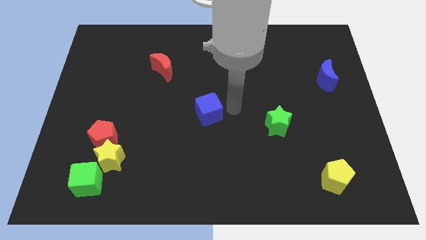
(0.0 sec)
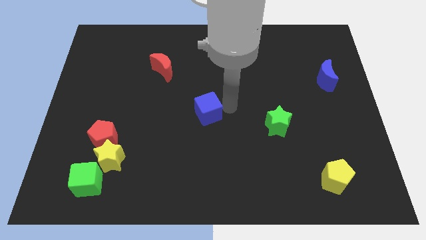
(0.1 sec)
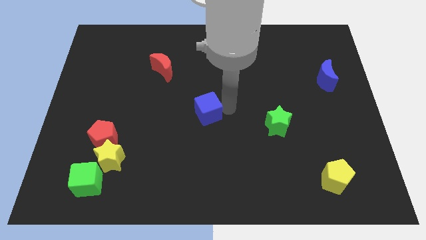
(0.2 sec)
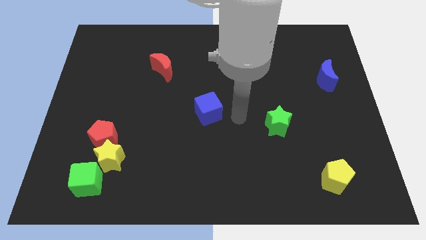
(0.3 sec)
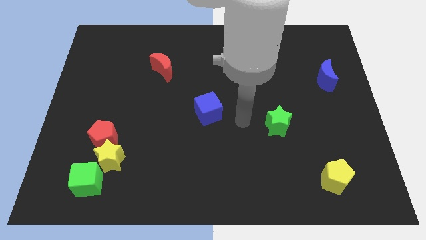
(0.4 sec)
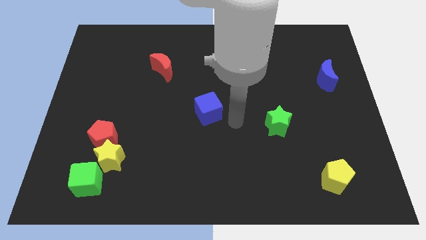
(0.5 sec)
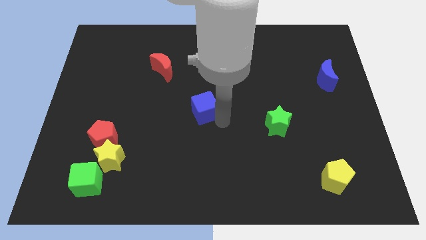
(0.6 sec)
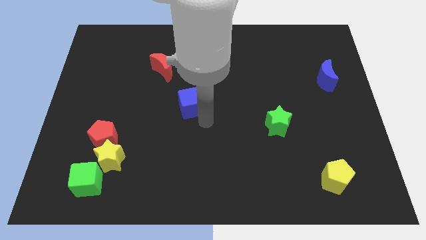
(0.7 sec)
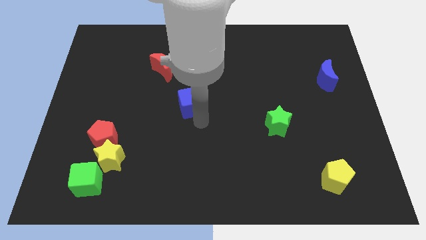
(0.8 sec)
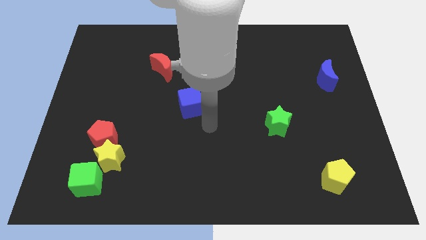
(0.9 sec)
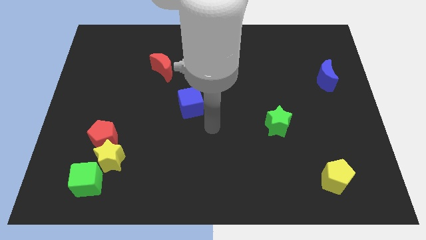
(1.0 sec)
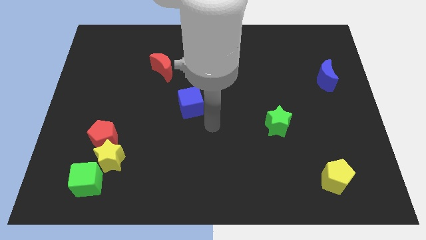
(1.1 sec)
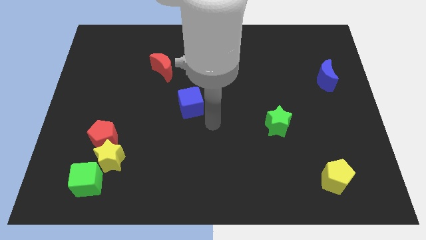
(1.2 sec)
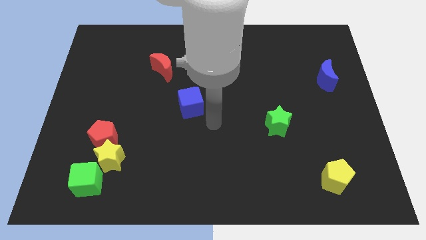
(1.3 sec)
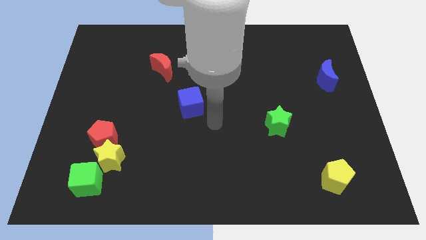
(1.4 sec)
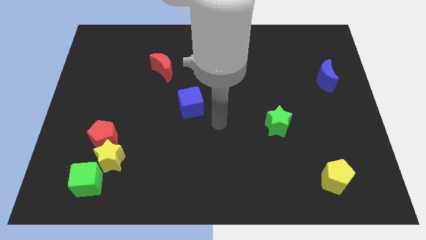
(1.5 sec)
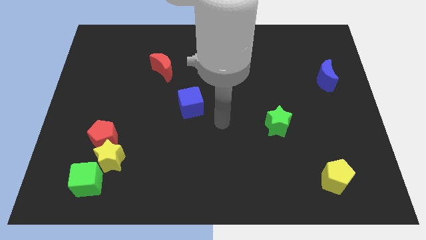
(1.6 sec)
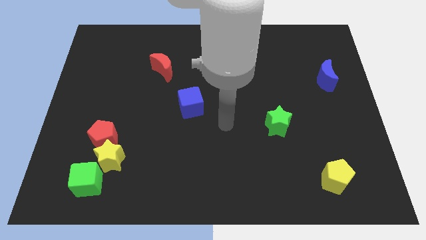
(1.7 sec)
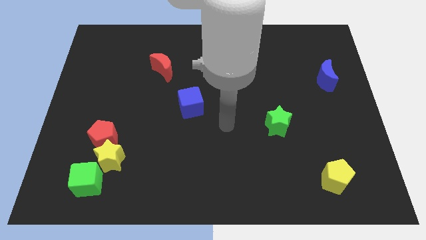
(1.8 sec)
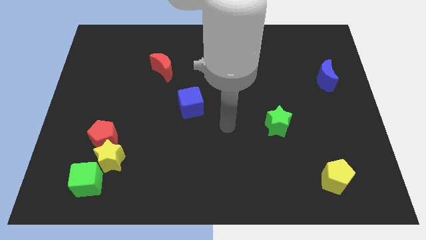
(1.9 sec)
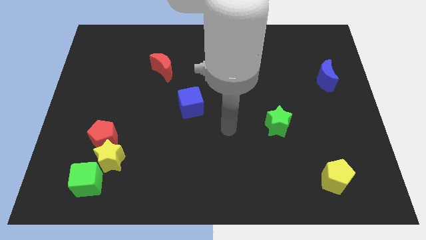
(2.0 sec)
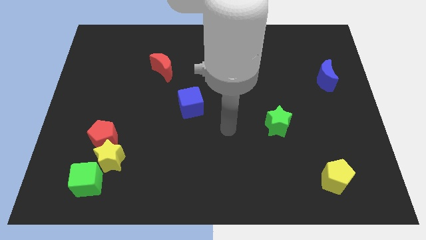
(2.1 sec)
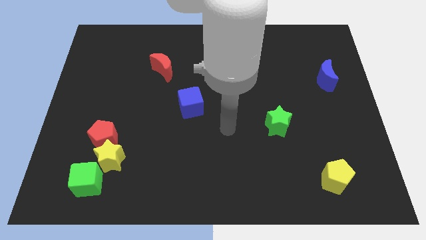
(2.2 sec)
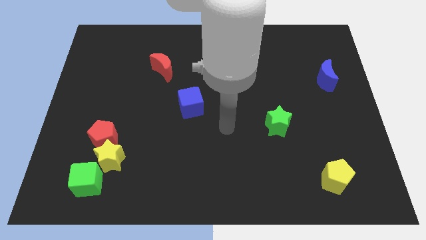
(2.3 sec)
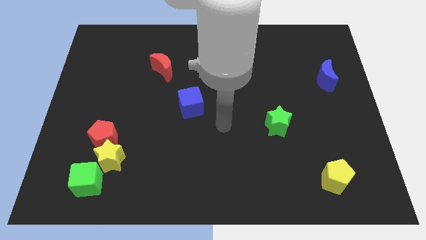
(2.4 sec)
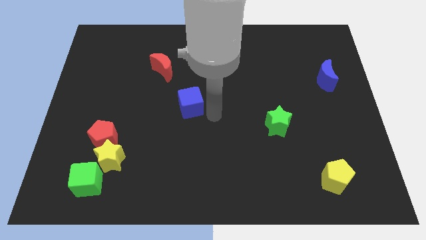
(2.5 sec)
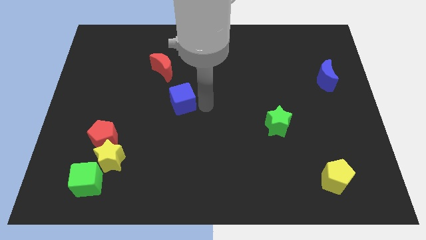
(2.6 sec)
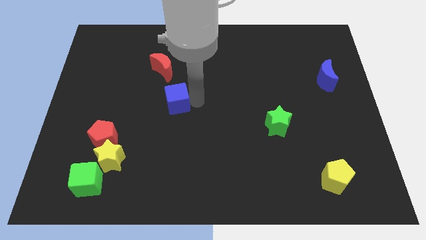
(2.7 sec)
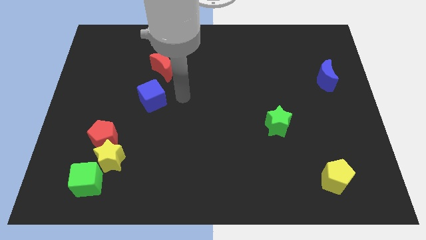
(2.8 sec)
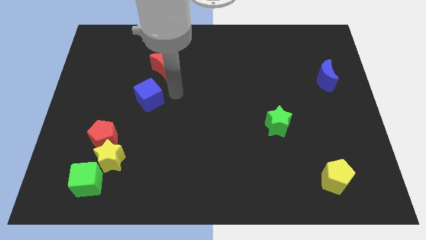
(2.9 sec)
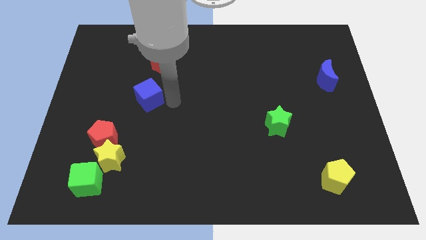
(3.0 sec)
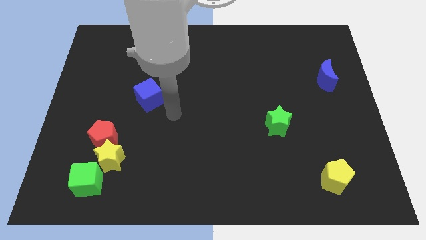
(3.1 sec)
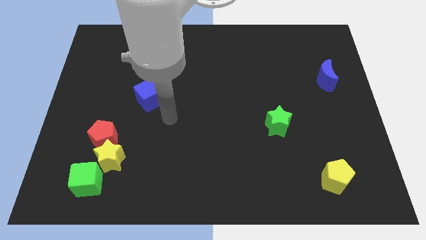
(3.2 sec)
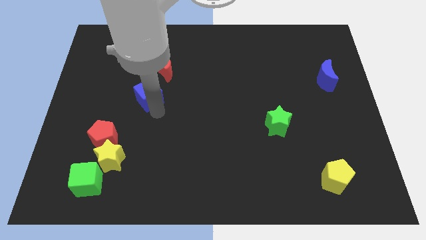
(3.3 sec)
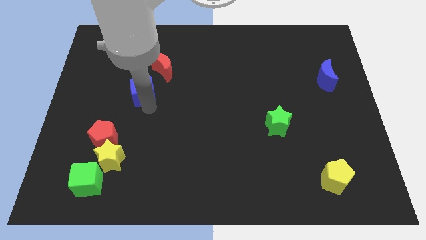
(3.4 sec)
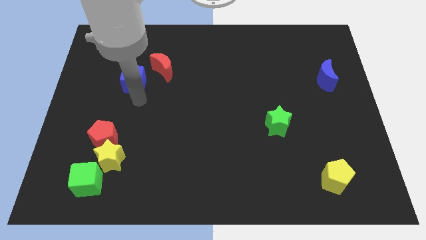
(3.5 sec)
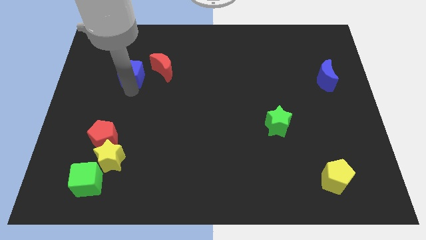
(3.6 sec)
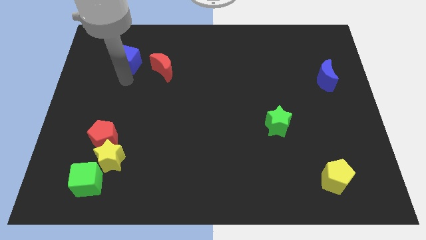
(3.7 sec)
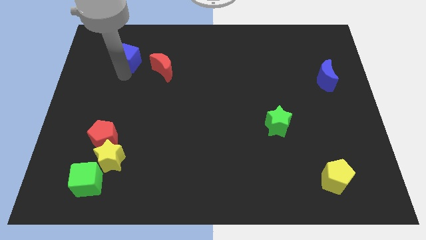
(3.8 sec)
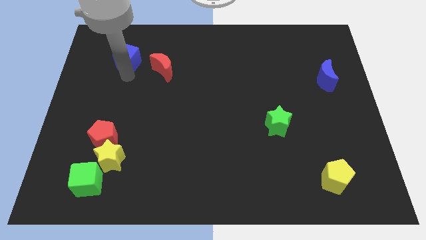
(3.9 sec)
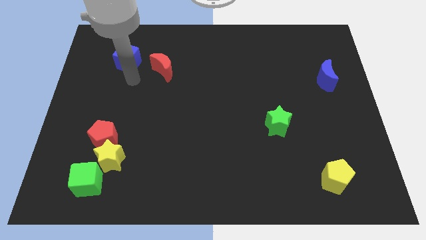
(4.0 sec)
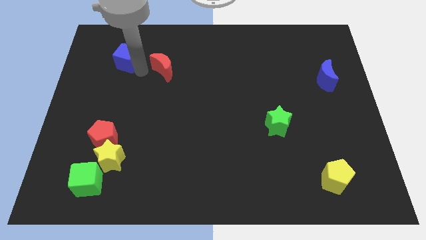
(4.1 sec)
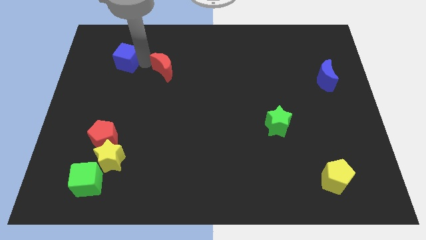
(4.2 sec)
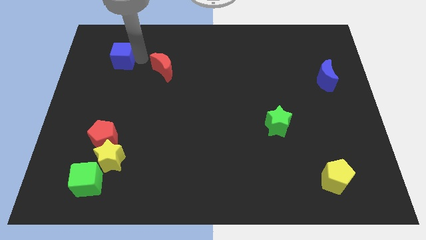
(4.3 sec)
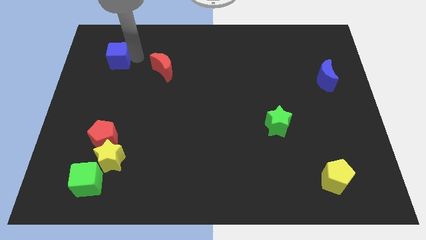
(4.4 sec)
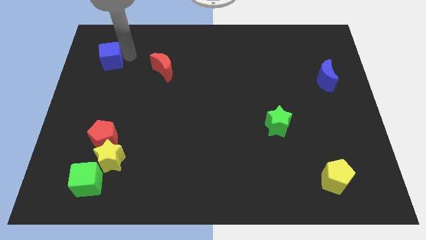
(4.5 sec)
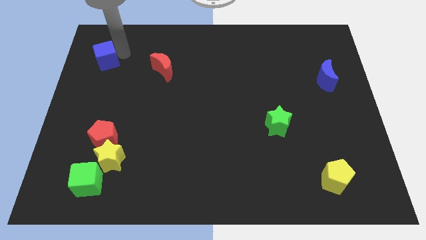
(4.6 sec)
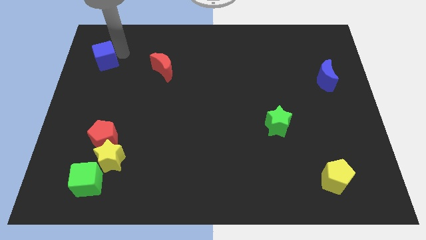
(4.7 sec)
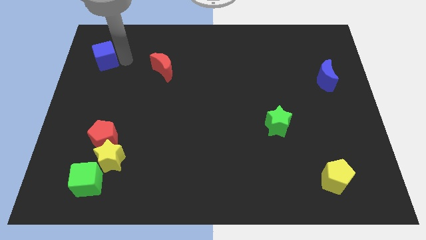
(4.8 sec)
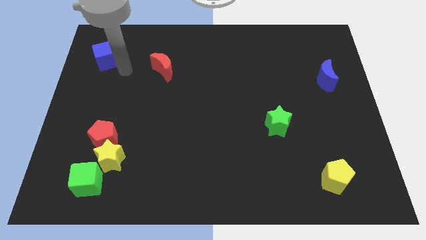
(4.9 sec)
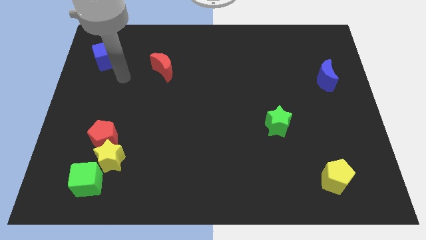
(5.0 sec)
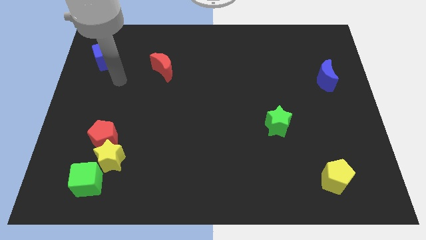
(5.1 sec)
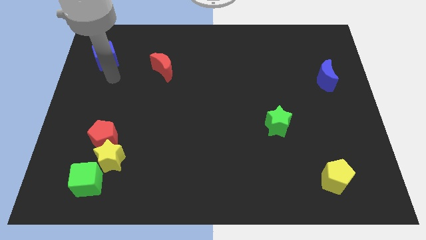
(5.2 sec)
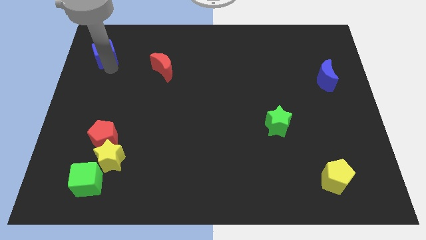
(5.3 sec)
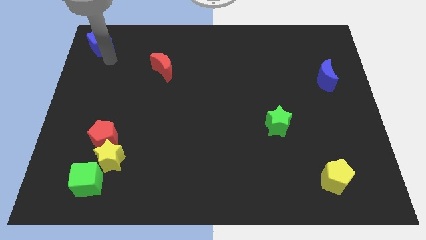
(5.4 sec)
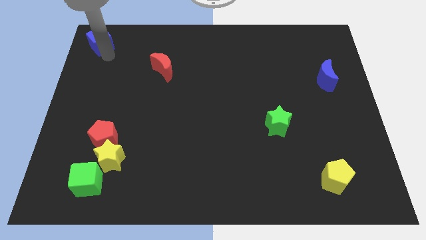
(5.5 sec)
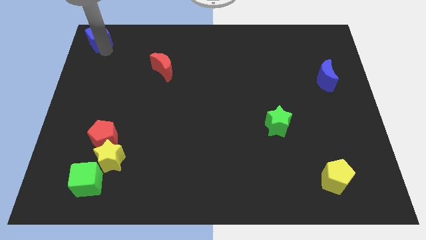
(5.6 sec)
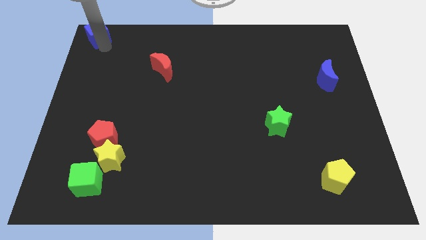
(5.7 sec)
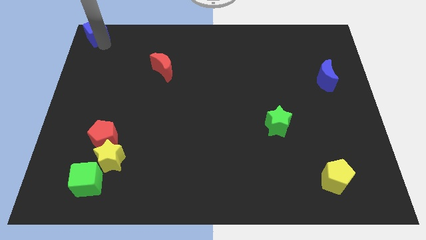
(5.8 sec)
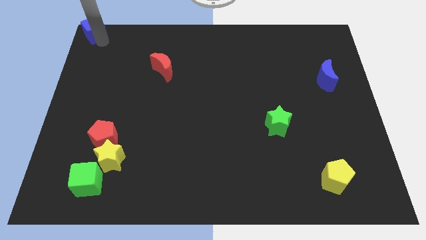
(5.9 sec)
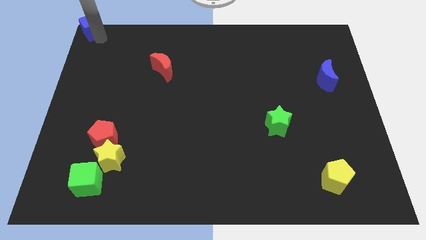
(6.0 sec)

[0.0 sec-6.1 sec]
push the blue cube towards the left top corner of the board

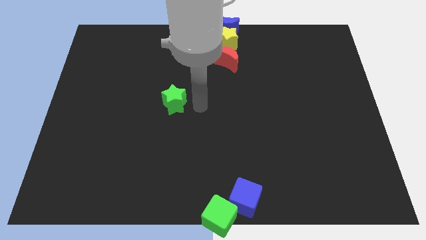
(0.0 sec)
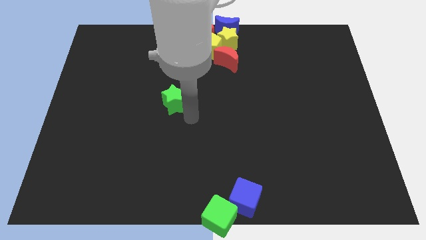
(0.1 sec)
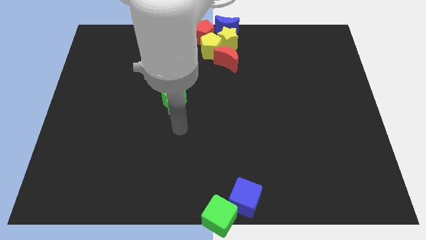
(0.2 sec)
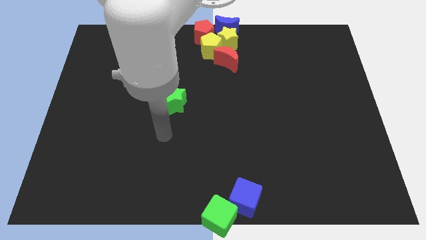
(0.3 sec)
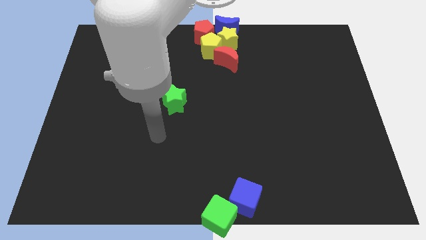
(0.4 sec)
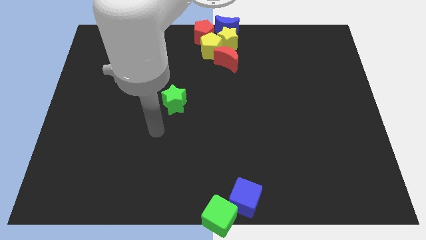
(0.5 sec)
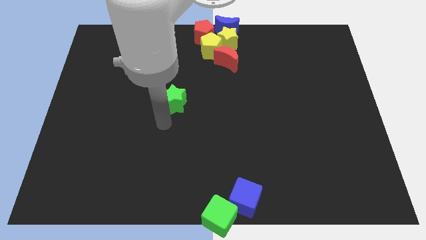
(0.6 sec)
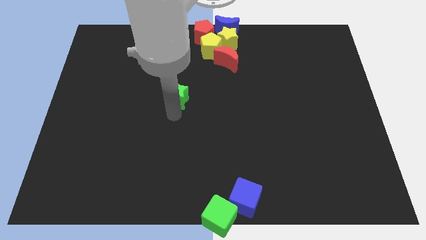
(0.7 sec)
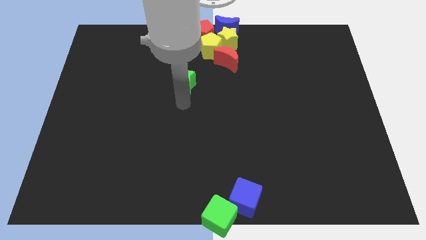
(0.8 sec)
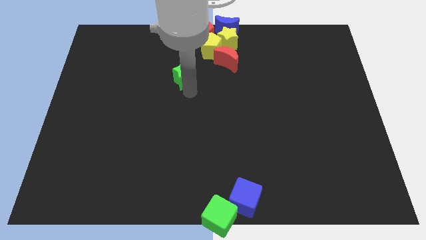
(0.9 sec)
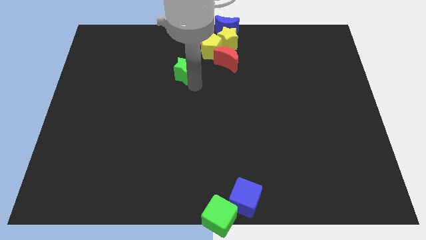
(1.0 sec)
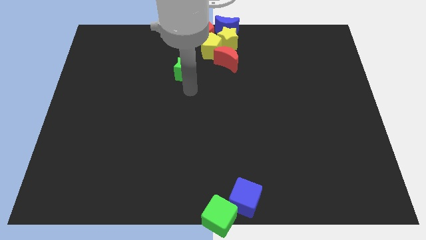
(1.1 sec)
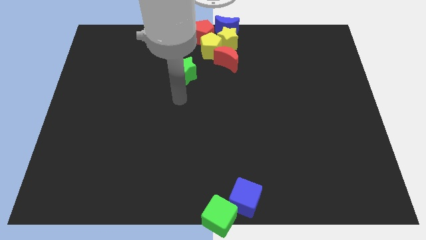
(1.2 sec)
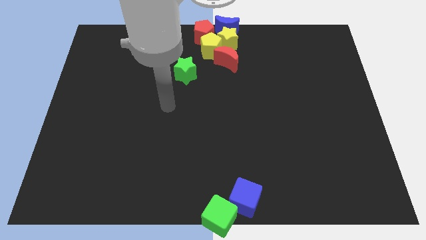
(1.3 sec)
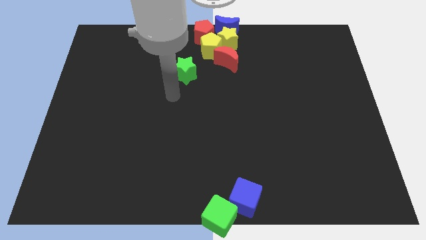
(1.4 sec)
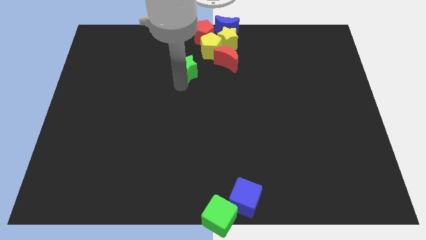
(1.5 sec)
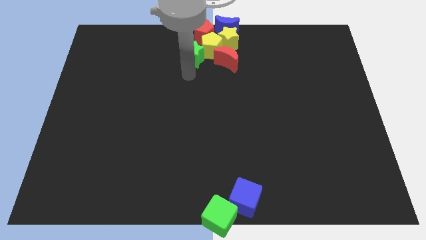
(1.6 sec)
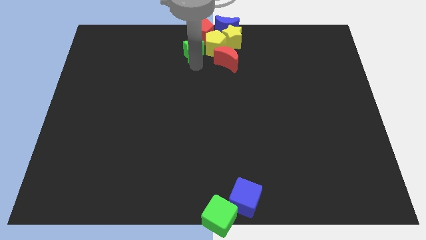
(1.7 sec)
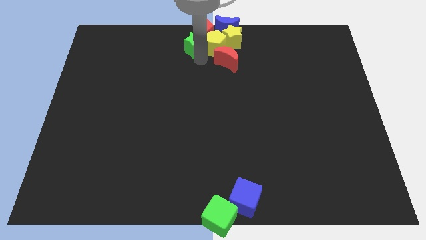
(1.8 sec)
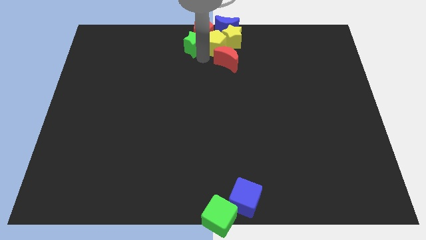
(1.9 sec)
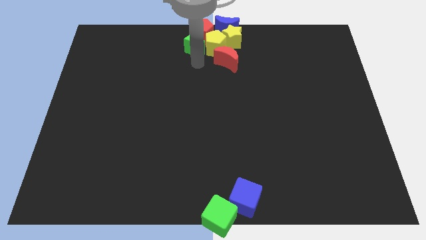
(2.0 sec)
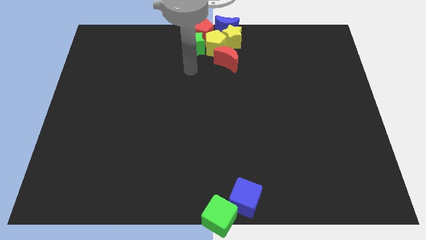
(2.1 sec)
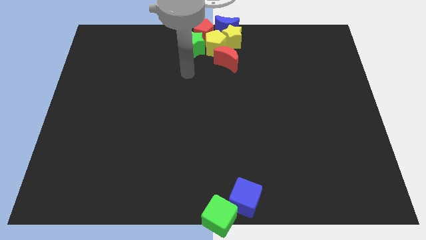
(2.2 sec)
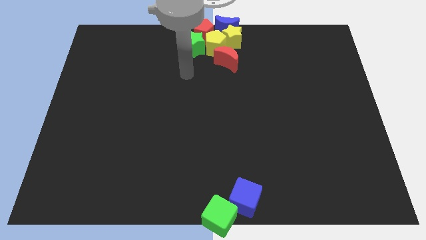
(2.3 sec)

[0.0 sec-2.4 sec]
push the green star into the group of blocks which are at the top center

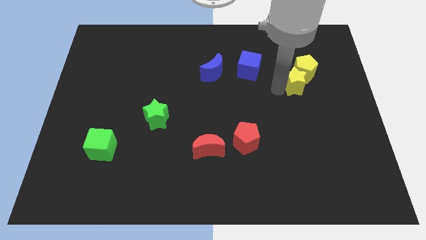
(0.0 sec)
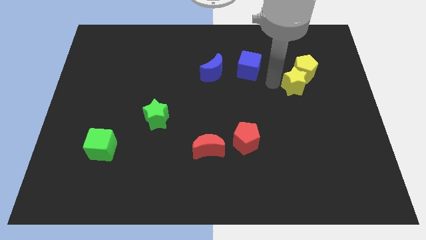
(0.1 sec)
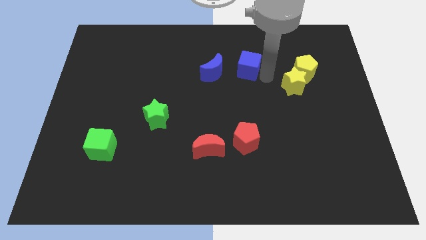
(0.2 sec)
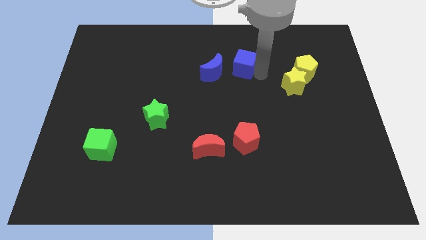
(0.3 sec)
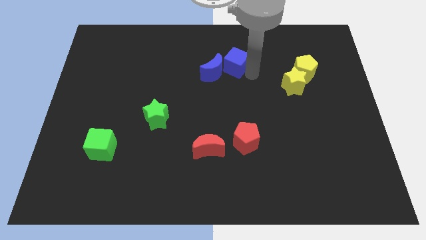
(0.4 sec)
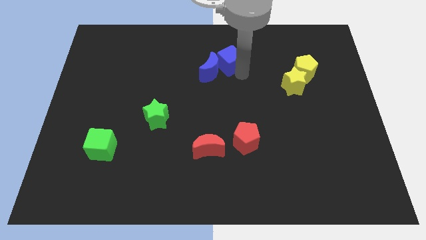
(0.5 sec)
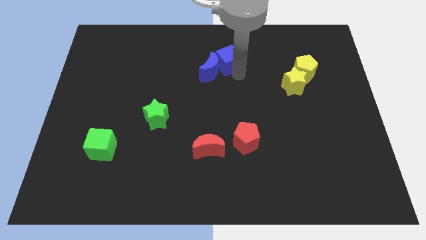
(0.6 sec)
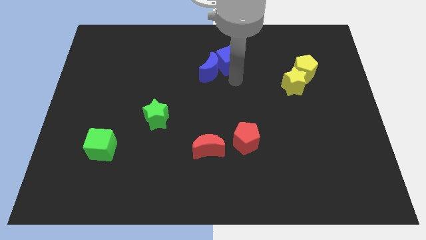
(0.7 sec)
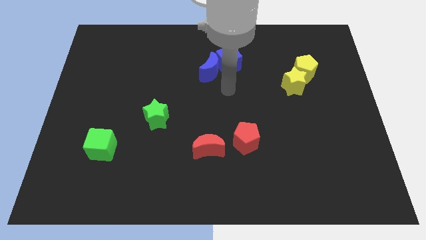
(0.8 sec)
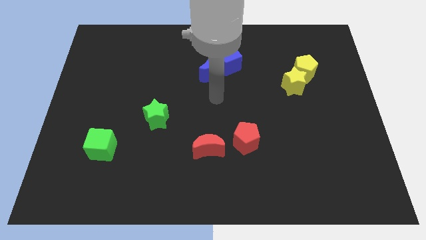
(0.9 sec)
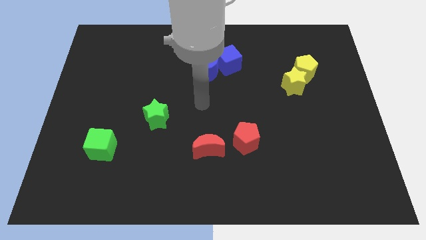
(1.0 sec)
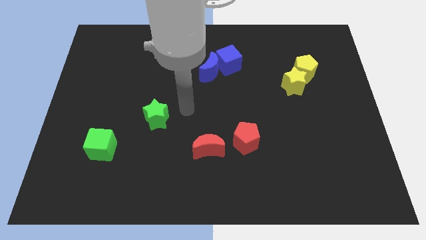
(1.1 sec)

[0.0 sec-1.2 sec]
drag blue cube into the blue moon
